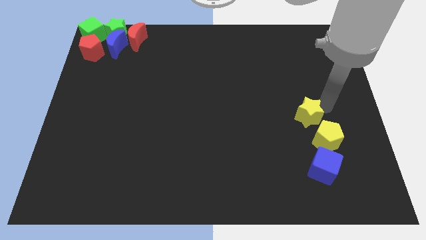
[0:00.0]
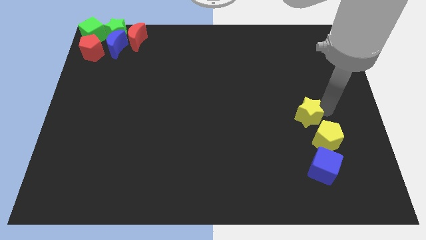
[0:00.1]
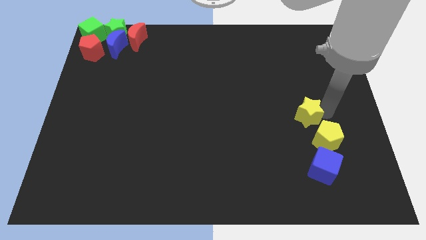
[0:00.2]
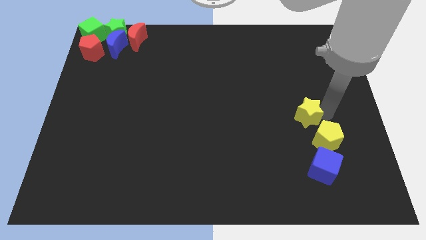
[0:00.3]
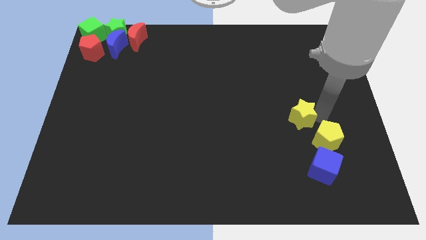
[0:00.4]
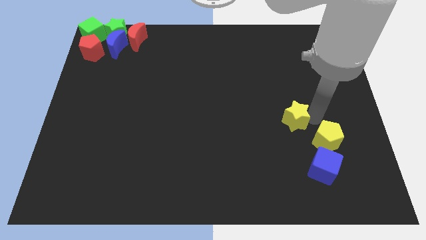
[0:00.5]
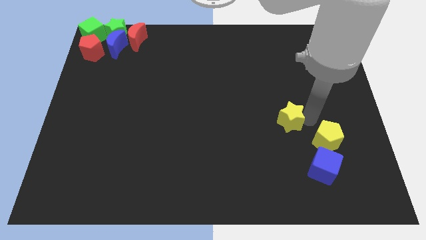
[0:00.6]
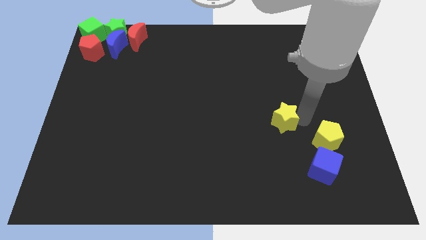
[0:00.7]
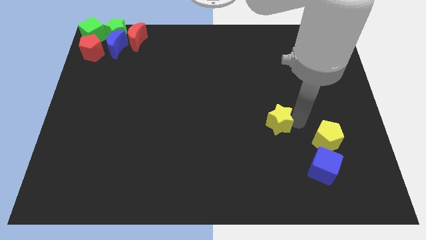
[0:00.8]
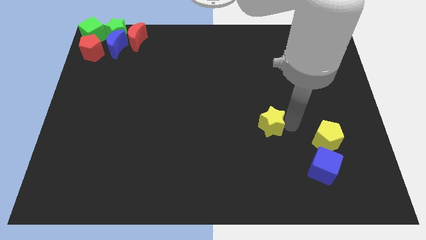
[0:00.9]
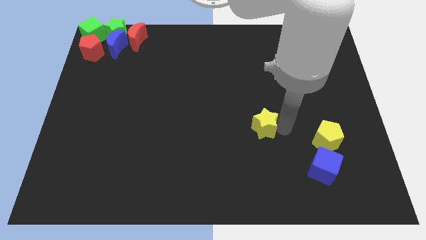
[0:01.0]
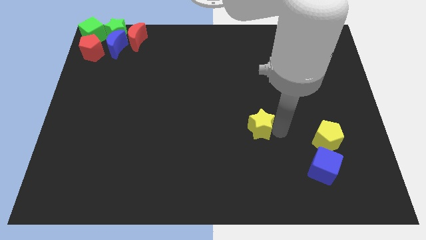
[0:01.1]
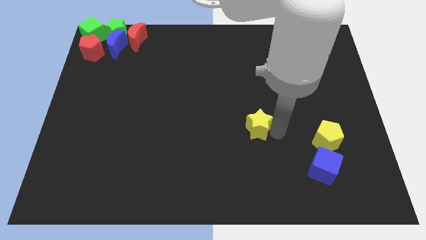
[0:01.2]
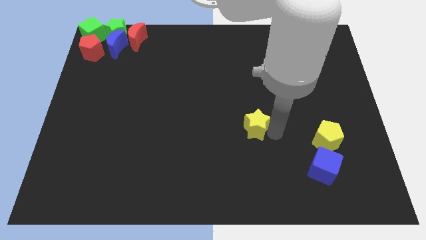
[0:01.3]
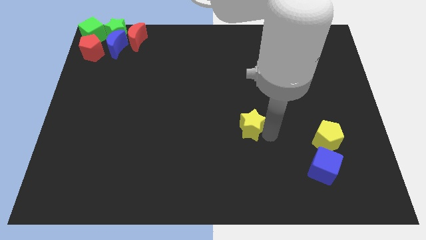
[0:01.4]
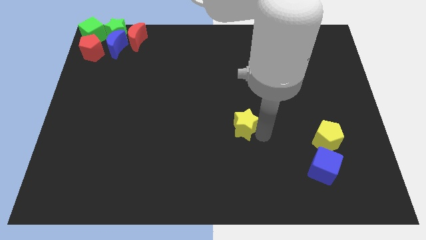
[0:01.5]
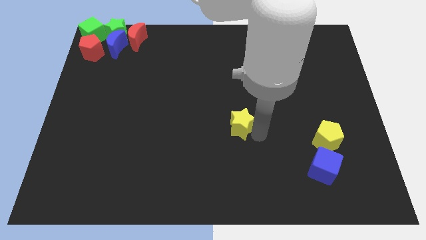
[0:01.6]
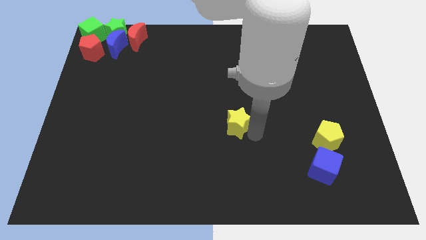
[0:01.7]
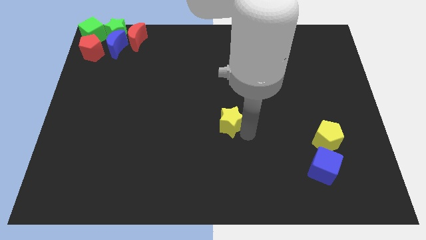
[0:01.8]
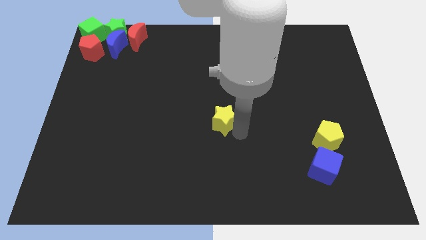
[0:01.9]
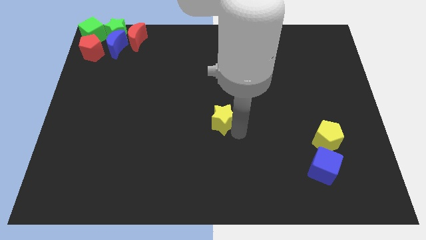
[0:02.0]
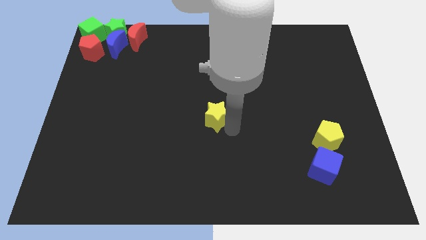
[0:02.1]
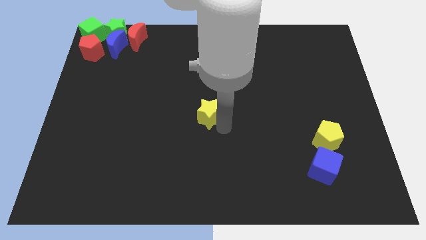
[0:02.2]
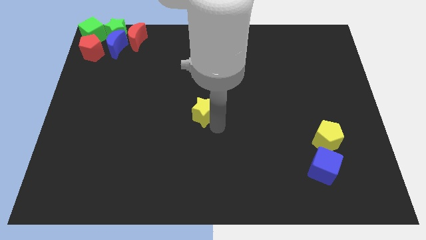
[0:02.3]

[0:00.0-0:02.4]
place the yellow star at the center of the board

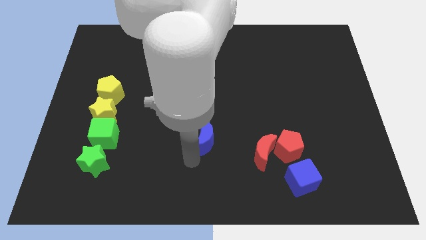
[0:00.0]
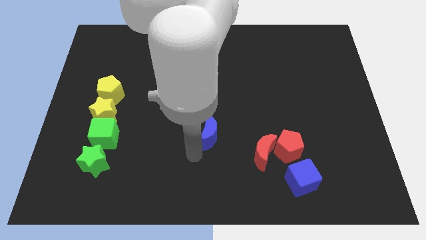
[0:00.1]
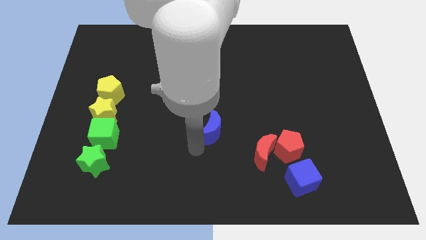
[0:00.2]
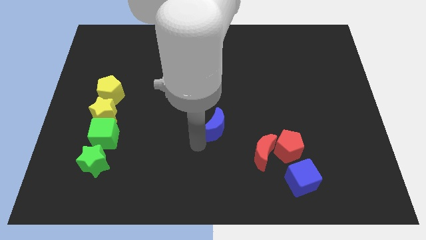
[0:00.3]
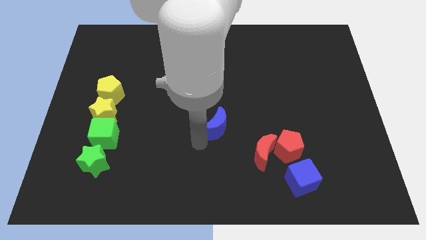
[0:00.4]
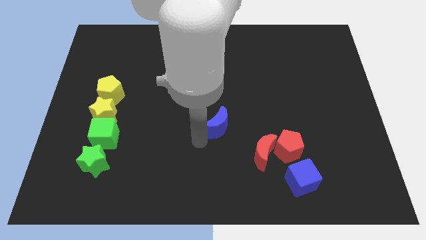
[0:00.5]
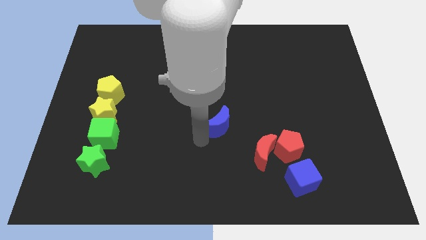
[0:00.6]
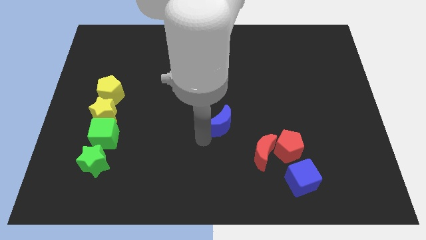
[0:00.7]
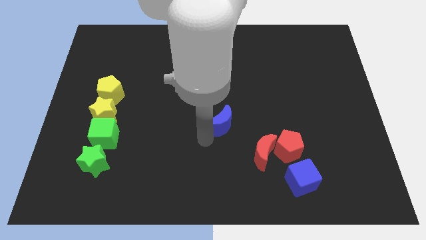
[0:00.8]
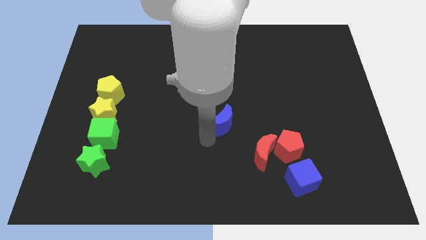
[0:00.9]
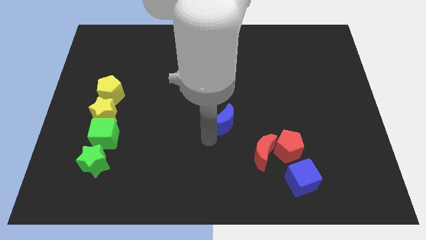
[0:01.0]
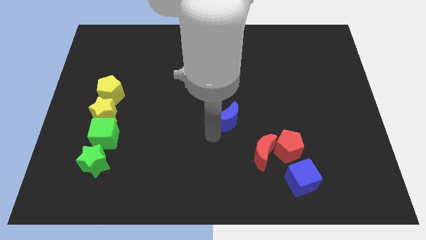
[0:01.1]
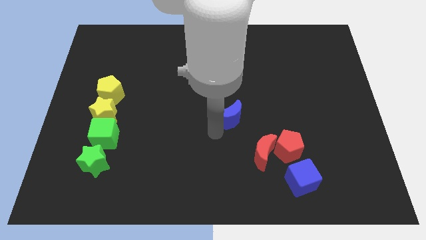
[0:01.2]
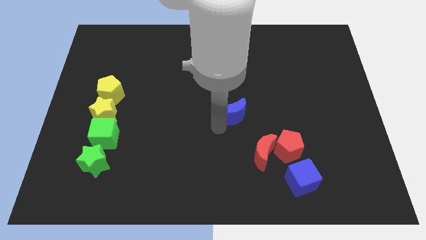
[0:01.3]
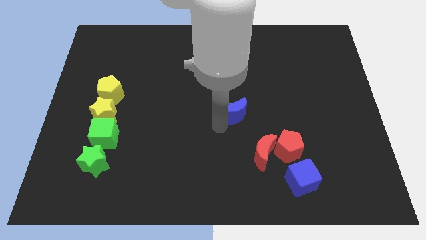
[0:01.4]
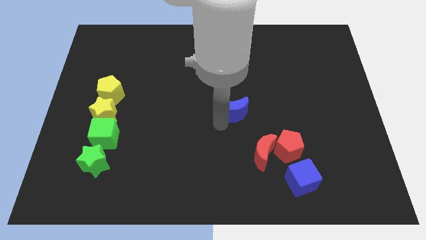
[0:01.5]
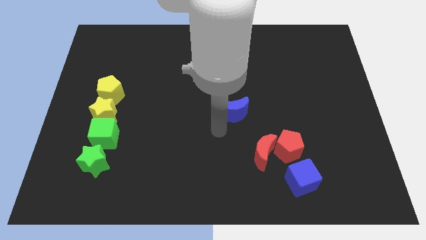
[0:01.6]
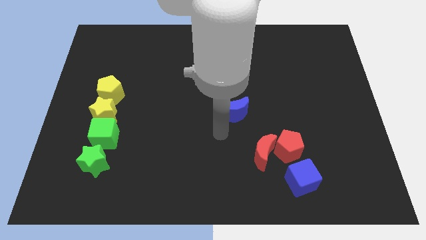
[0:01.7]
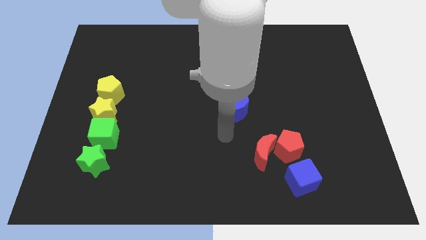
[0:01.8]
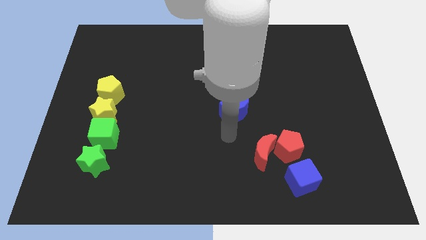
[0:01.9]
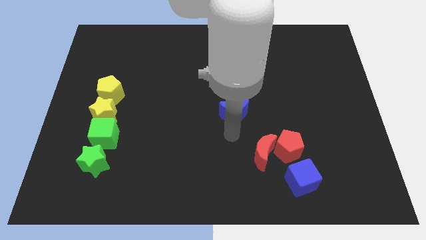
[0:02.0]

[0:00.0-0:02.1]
slide blue moon towards center

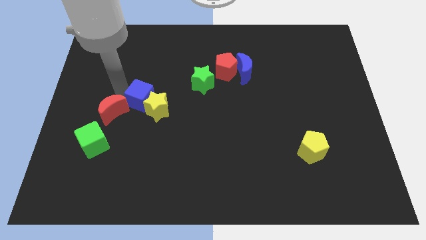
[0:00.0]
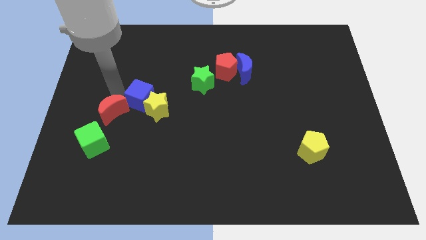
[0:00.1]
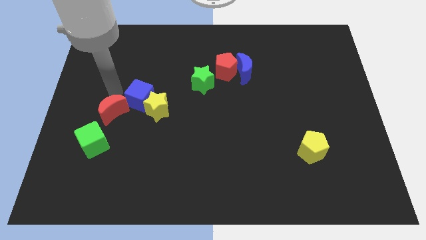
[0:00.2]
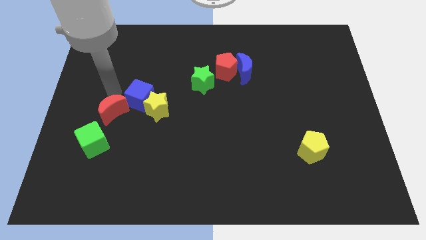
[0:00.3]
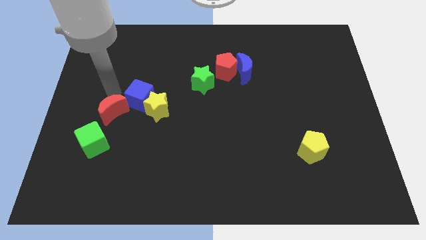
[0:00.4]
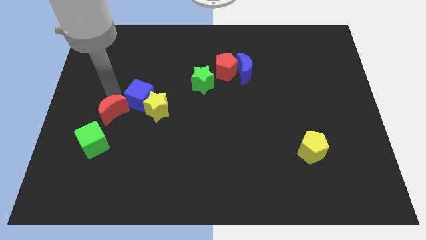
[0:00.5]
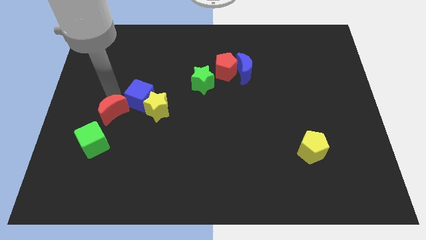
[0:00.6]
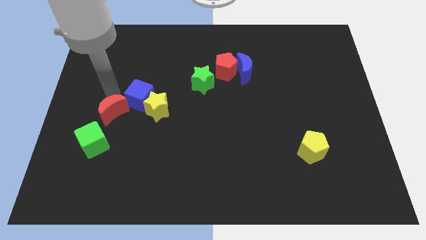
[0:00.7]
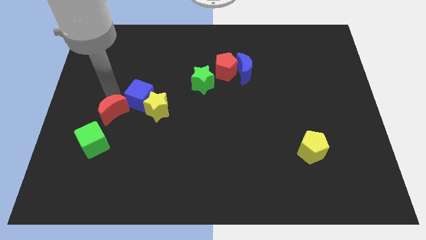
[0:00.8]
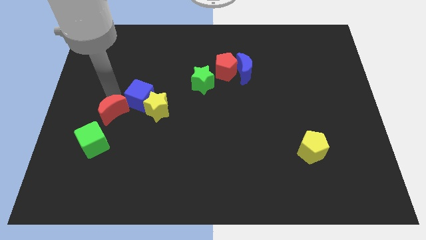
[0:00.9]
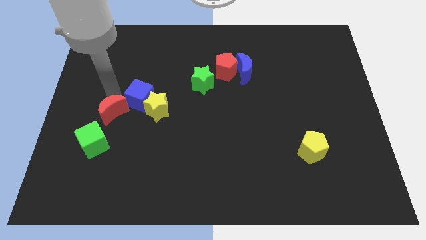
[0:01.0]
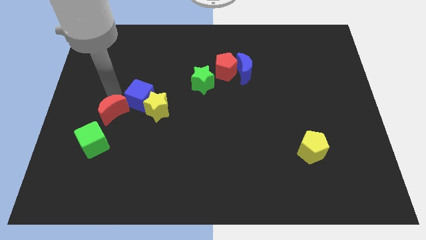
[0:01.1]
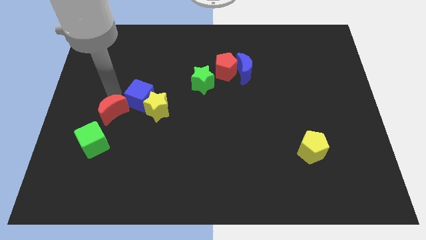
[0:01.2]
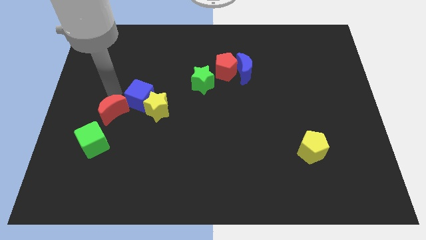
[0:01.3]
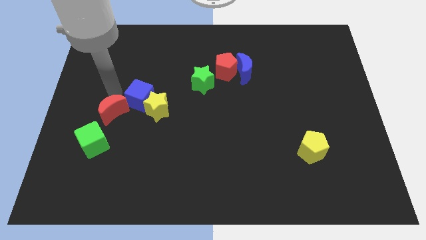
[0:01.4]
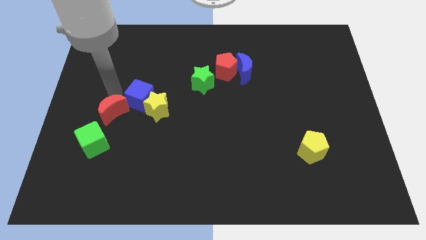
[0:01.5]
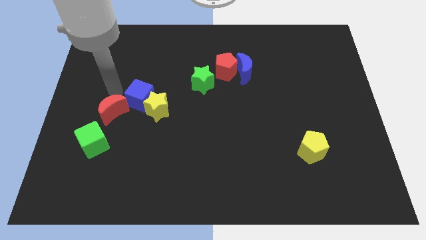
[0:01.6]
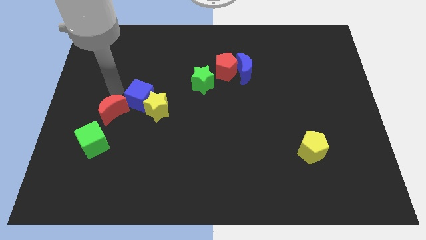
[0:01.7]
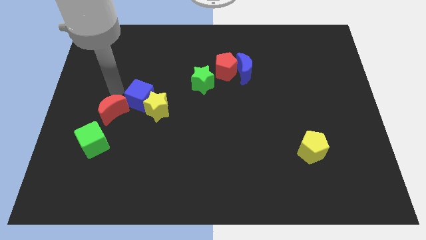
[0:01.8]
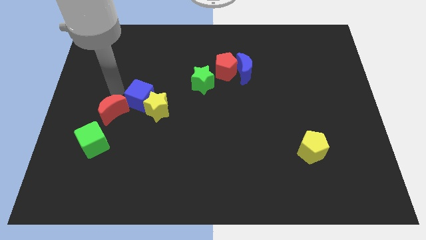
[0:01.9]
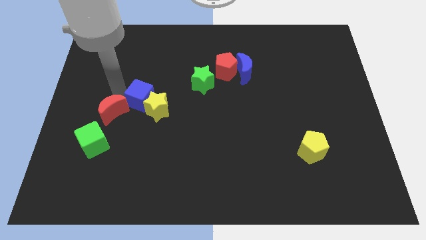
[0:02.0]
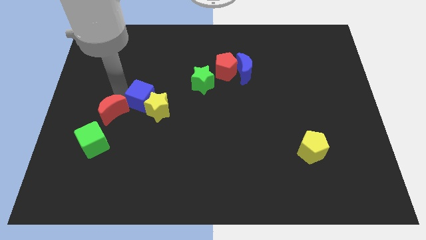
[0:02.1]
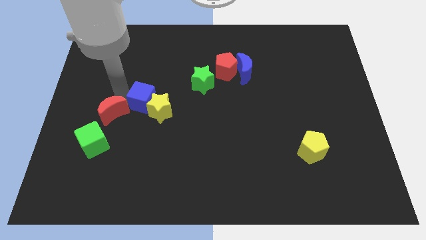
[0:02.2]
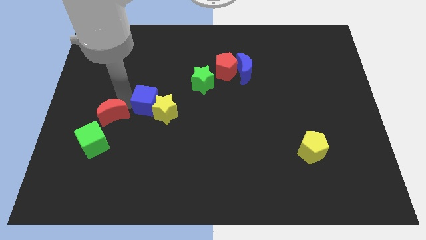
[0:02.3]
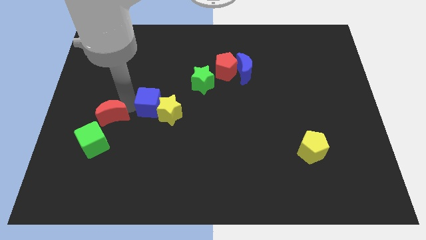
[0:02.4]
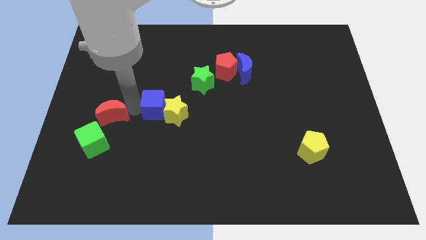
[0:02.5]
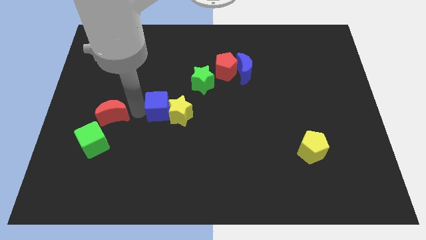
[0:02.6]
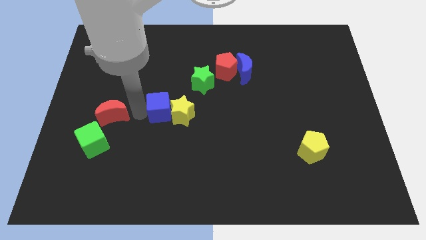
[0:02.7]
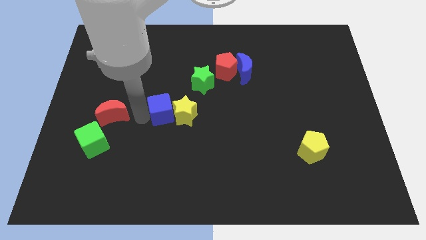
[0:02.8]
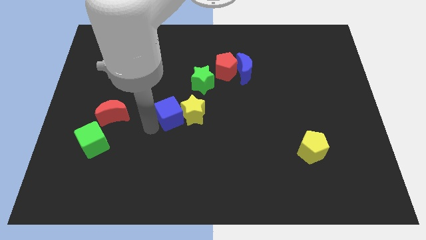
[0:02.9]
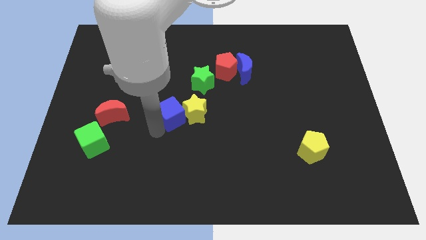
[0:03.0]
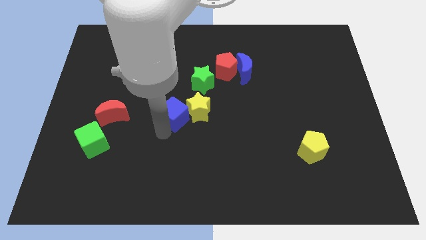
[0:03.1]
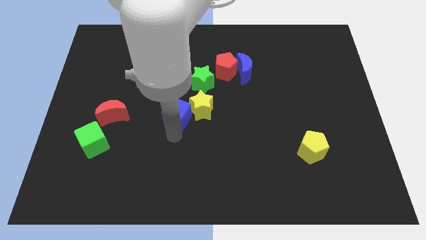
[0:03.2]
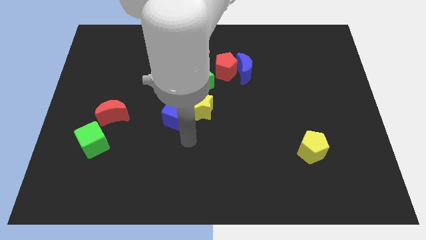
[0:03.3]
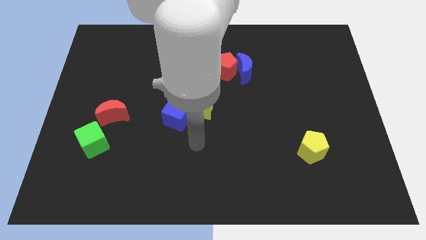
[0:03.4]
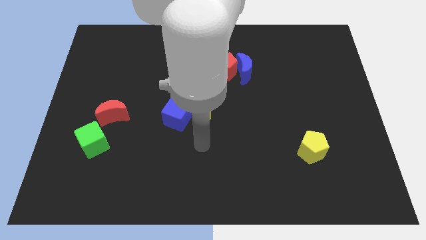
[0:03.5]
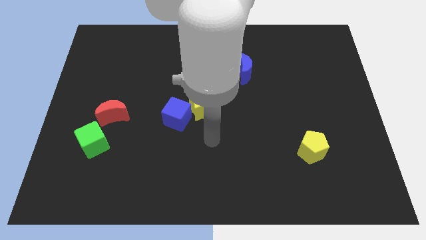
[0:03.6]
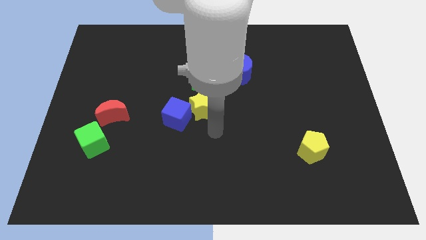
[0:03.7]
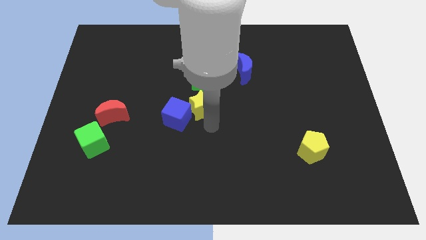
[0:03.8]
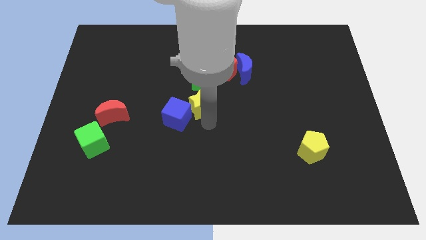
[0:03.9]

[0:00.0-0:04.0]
separate the blue cube and yellow star from the red moon

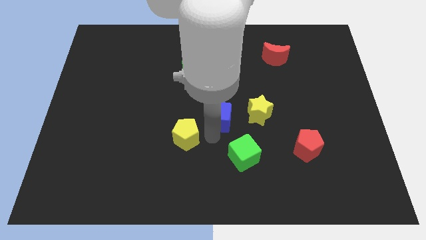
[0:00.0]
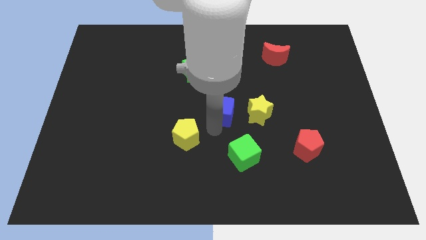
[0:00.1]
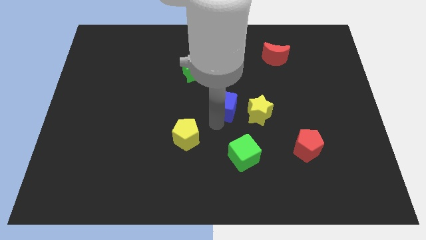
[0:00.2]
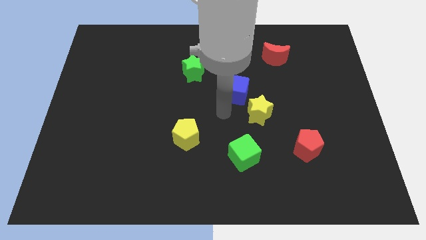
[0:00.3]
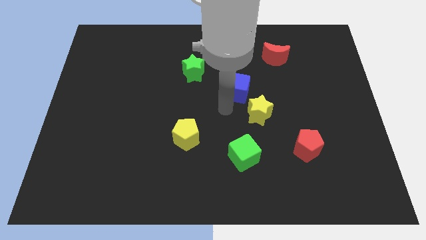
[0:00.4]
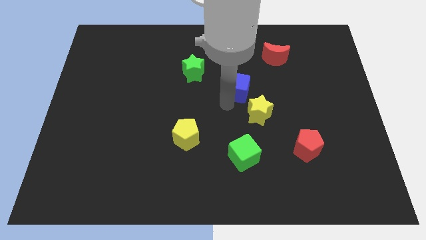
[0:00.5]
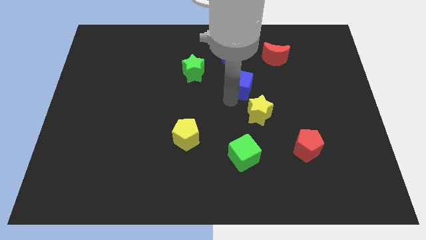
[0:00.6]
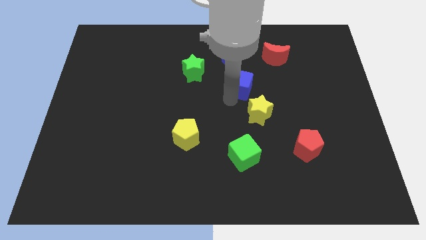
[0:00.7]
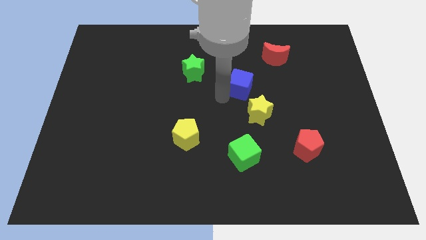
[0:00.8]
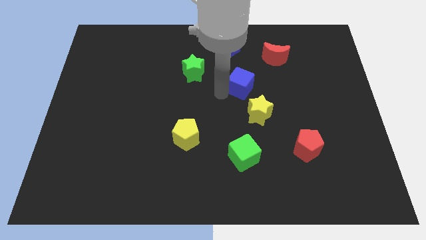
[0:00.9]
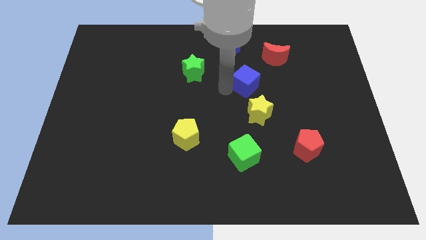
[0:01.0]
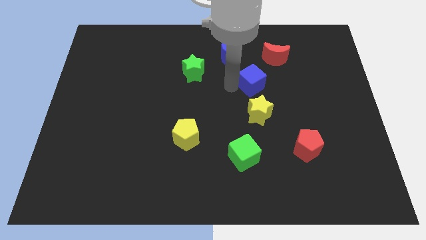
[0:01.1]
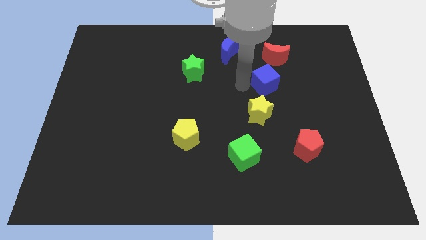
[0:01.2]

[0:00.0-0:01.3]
push blue cube to the top of yellow star
